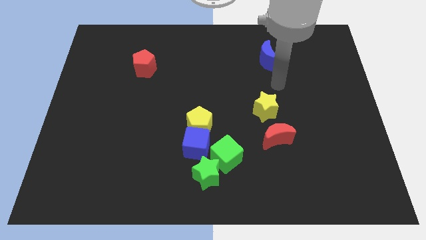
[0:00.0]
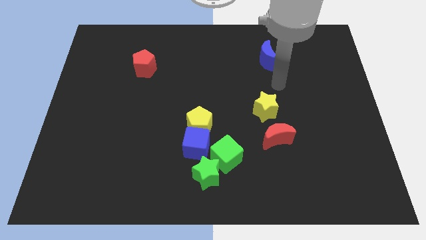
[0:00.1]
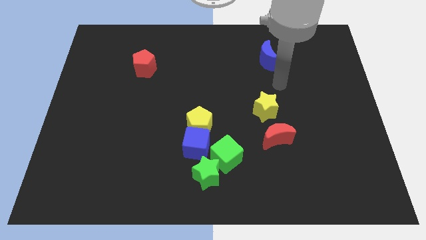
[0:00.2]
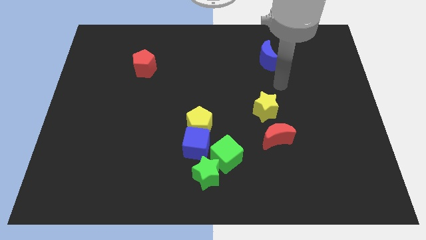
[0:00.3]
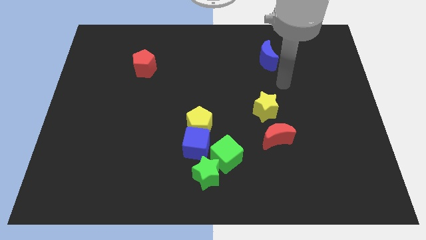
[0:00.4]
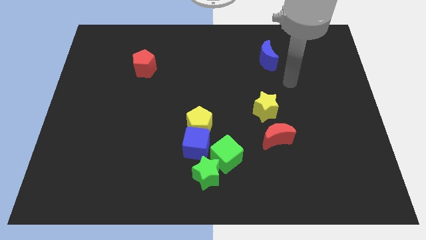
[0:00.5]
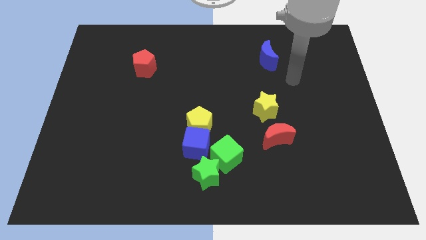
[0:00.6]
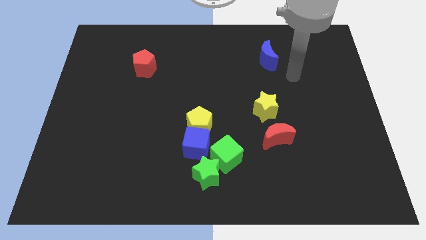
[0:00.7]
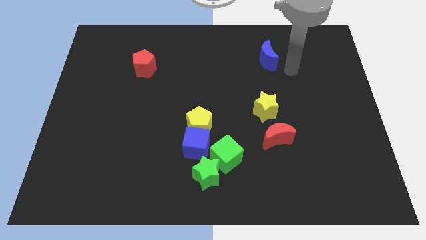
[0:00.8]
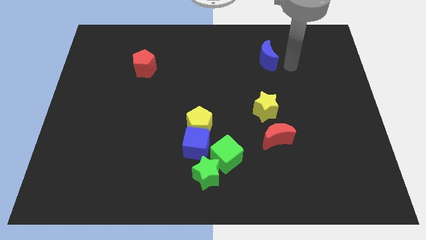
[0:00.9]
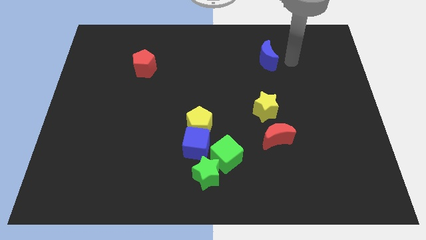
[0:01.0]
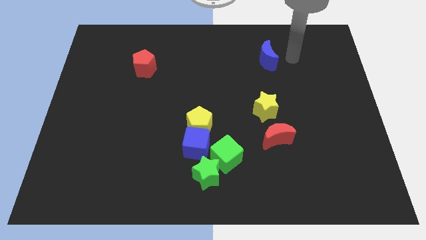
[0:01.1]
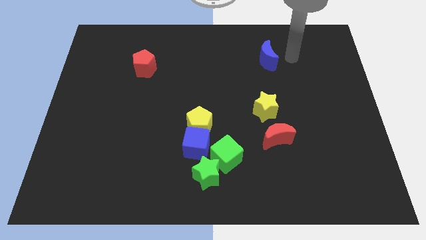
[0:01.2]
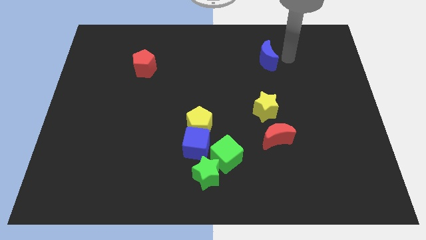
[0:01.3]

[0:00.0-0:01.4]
place your arm to the right of the blue crescent

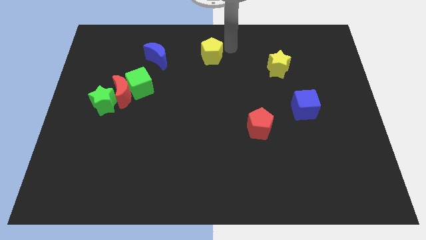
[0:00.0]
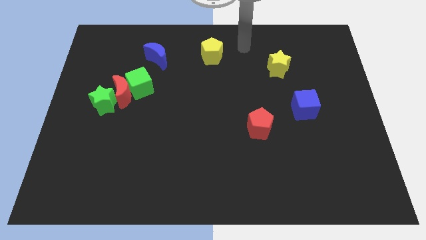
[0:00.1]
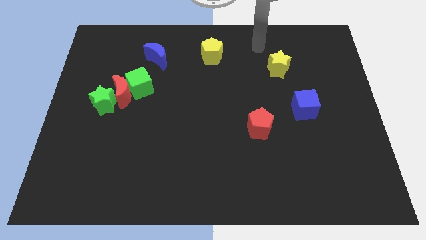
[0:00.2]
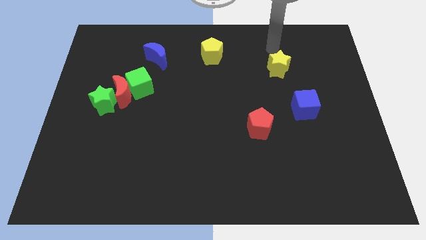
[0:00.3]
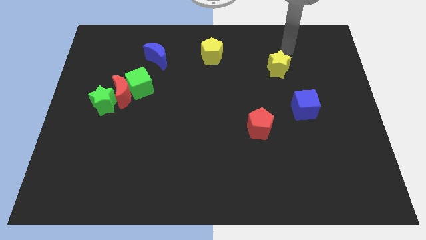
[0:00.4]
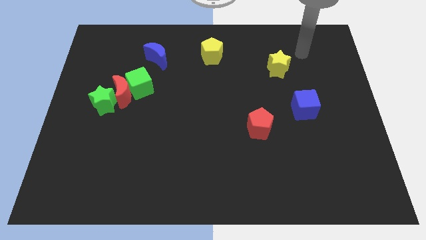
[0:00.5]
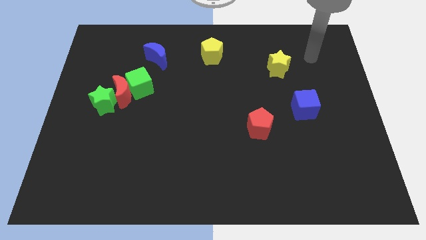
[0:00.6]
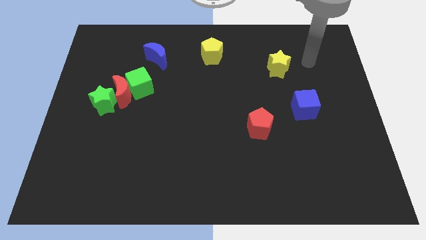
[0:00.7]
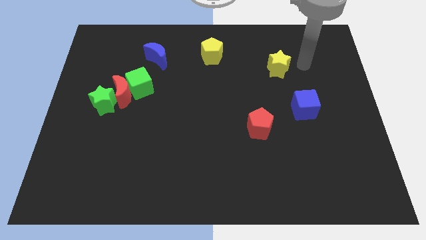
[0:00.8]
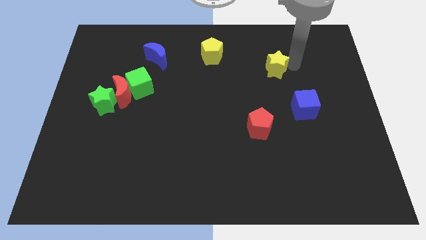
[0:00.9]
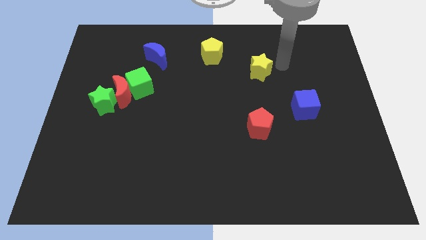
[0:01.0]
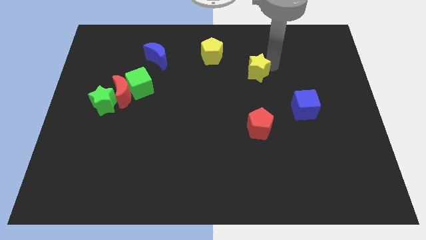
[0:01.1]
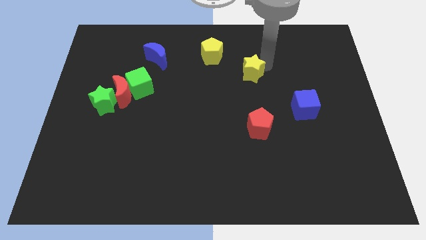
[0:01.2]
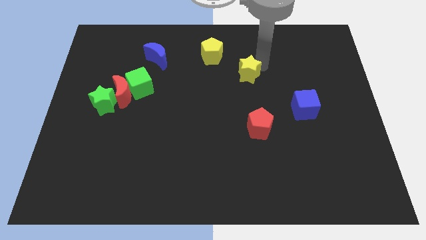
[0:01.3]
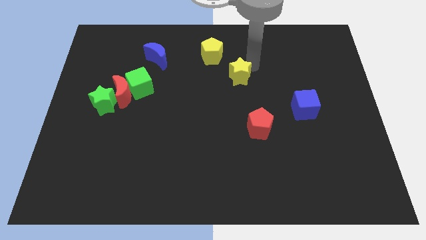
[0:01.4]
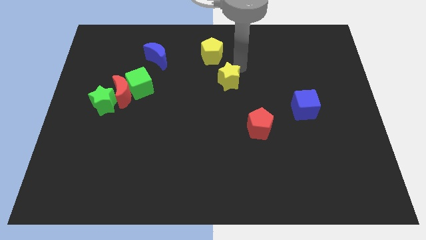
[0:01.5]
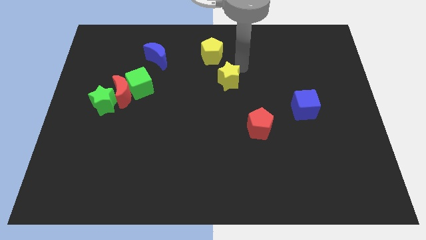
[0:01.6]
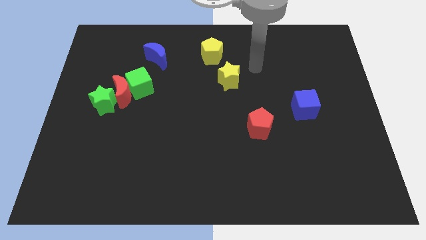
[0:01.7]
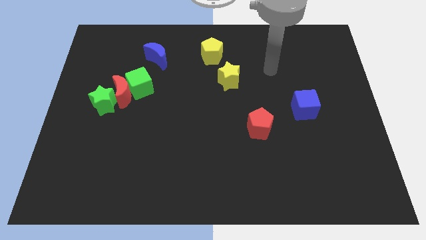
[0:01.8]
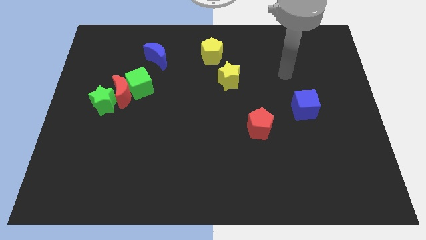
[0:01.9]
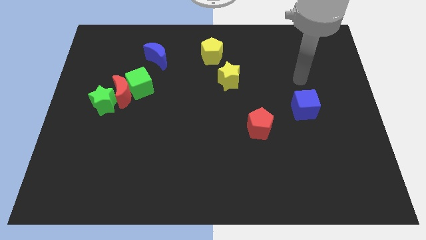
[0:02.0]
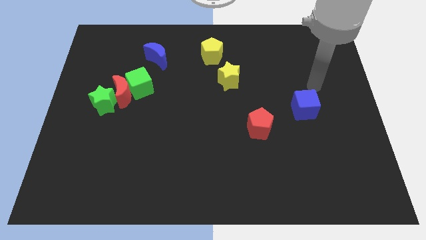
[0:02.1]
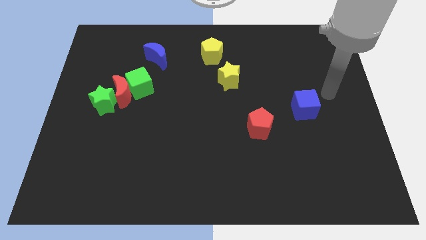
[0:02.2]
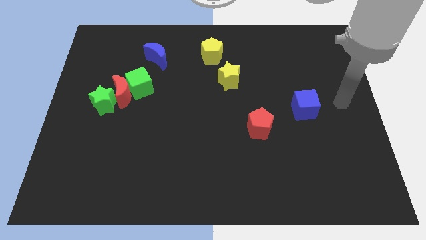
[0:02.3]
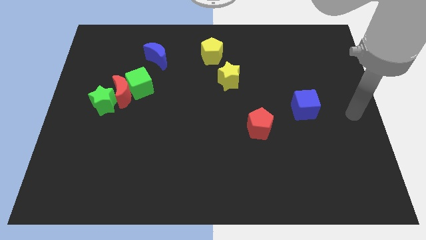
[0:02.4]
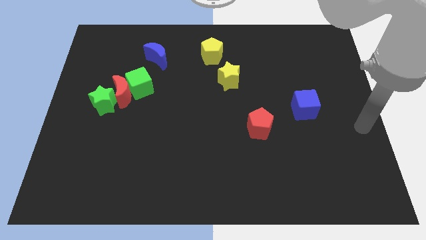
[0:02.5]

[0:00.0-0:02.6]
push the yellow star to right bottom to the yellow pentagon

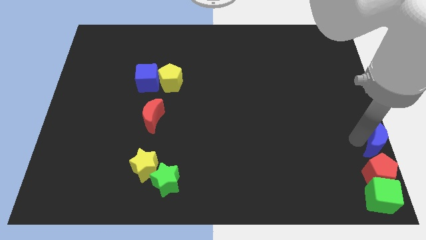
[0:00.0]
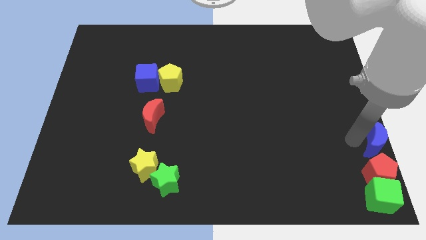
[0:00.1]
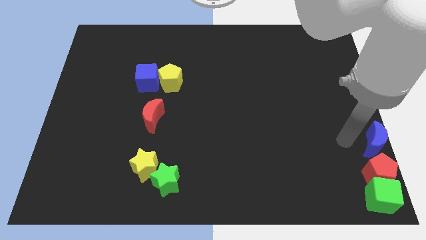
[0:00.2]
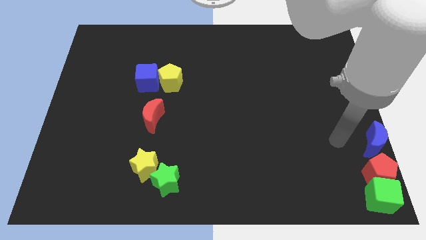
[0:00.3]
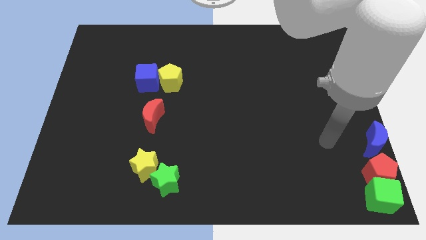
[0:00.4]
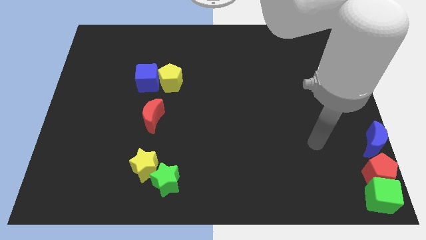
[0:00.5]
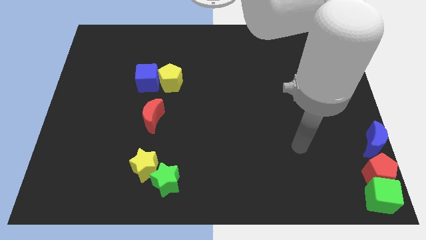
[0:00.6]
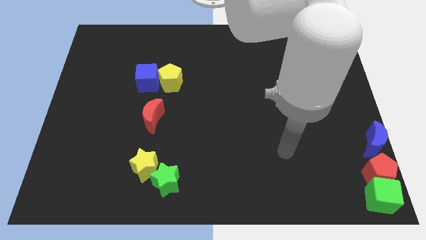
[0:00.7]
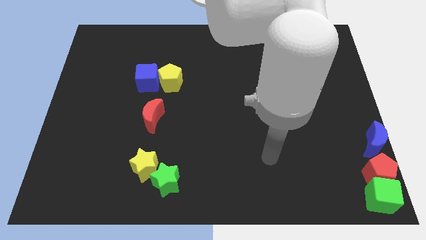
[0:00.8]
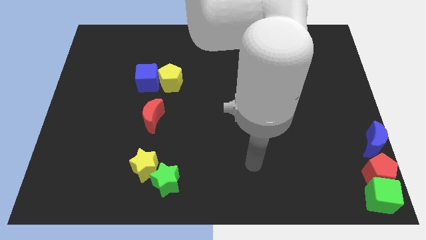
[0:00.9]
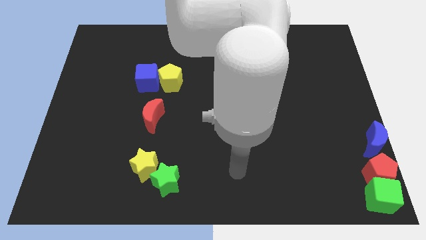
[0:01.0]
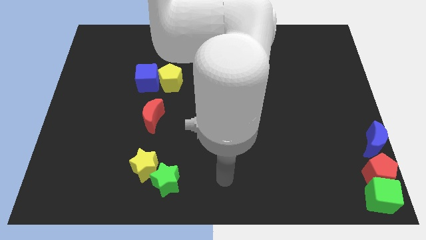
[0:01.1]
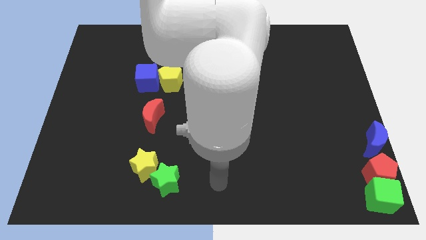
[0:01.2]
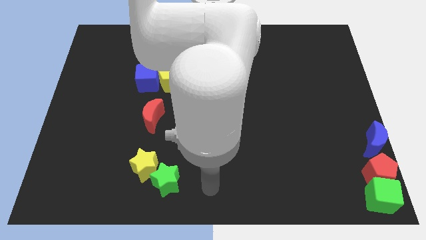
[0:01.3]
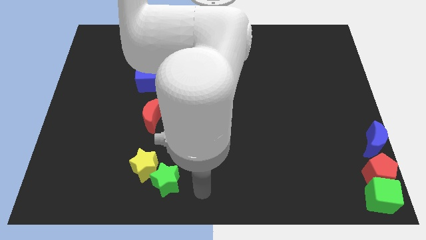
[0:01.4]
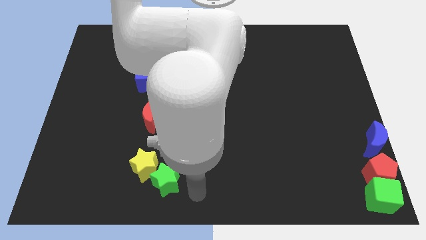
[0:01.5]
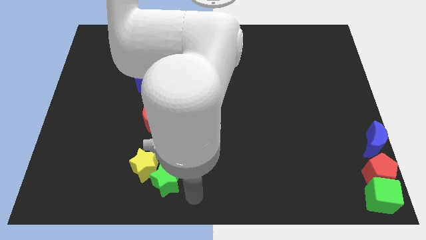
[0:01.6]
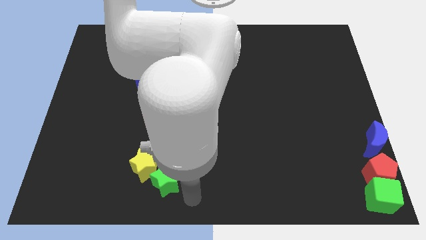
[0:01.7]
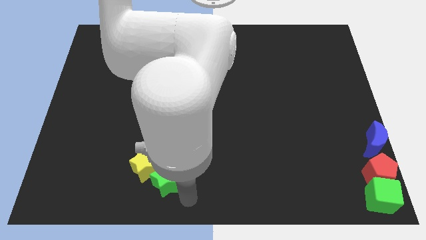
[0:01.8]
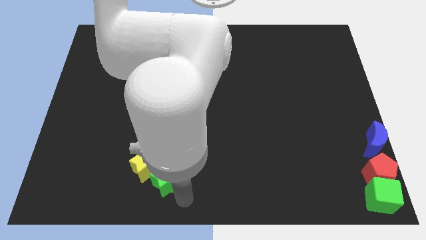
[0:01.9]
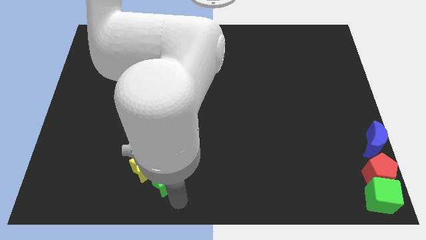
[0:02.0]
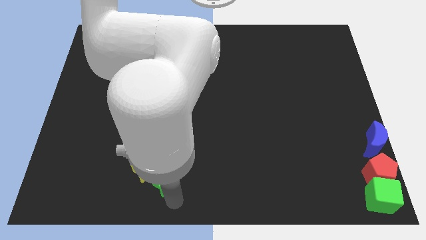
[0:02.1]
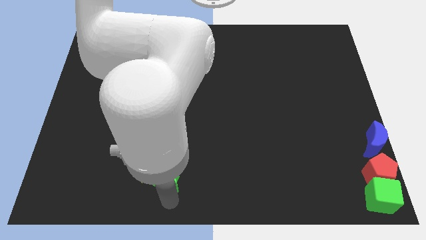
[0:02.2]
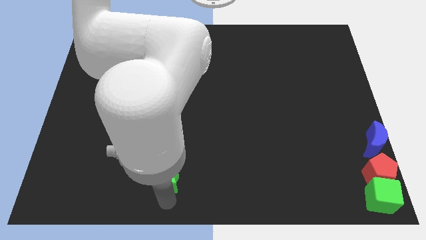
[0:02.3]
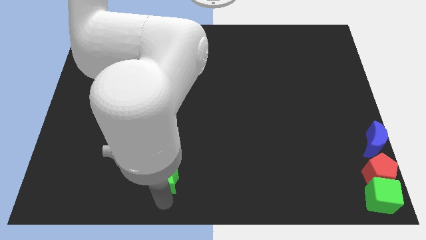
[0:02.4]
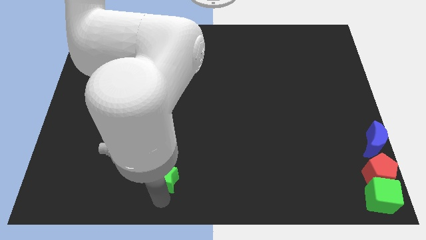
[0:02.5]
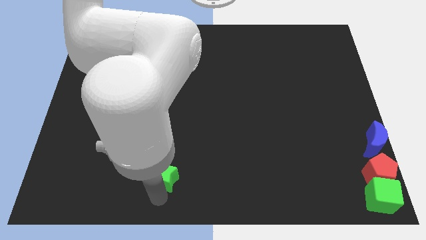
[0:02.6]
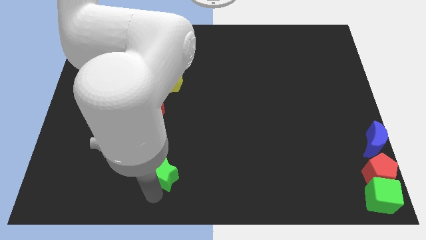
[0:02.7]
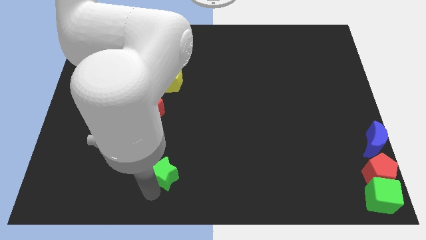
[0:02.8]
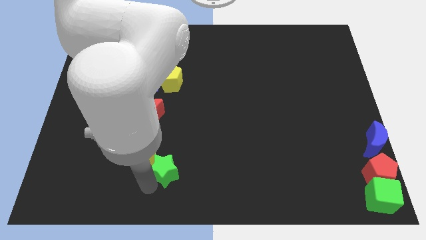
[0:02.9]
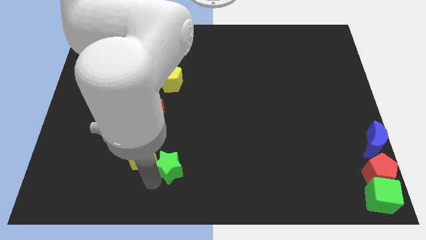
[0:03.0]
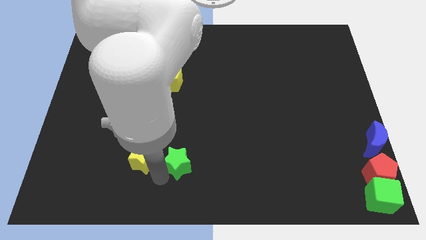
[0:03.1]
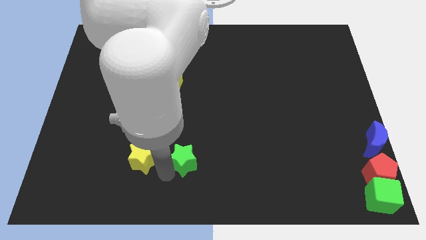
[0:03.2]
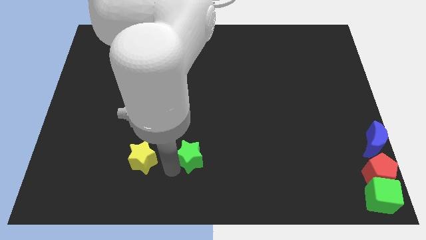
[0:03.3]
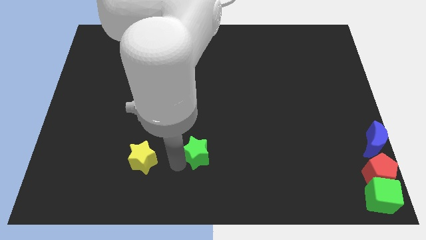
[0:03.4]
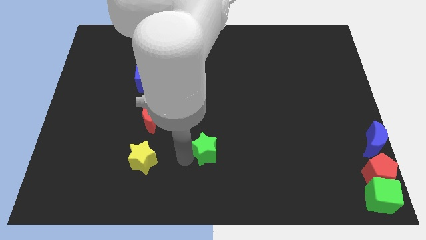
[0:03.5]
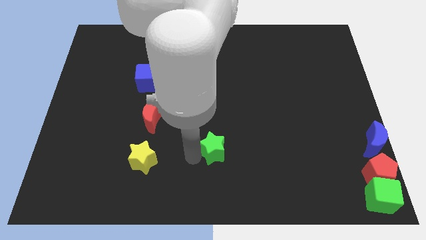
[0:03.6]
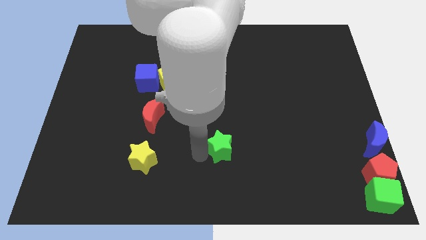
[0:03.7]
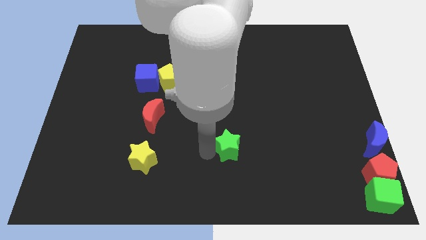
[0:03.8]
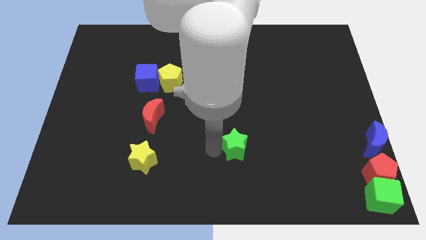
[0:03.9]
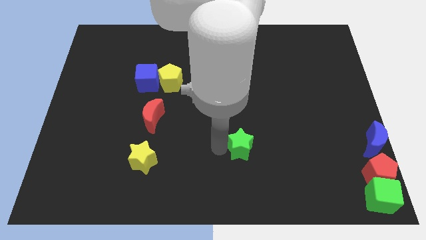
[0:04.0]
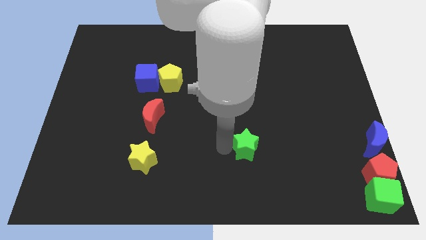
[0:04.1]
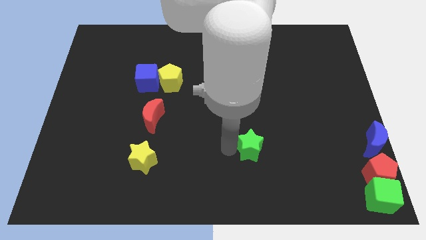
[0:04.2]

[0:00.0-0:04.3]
move green star towards the right centre of the board

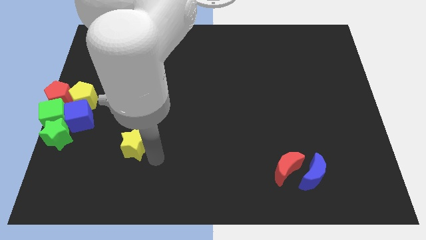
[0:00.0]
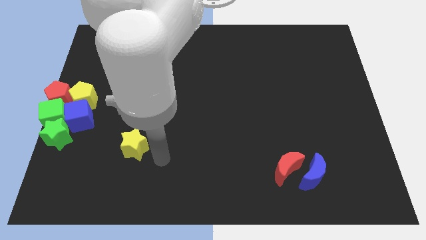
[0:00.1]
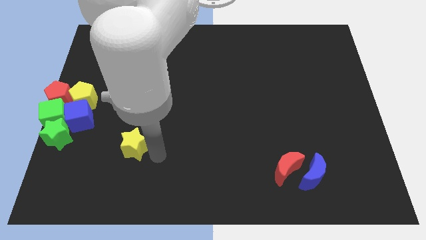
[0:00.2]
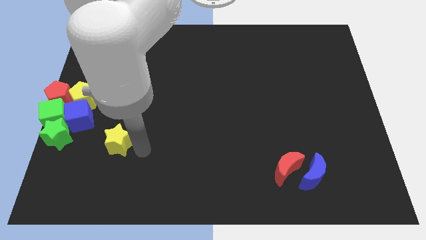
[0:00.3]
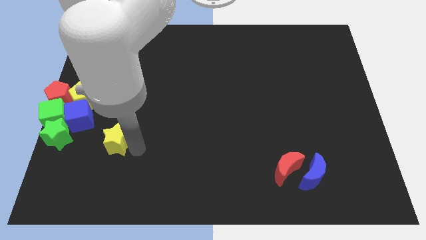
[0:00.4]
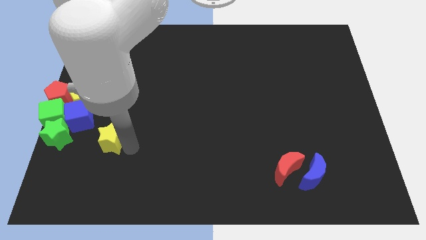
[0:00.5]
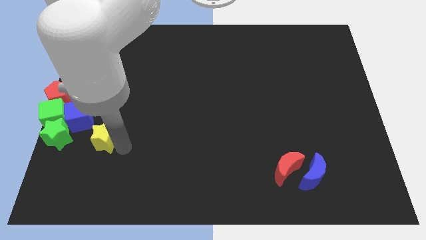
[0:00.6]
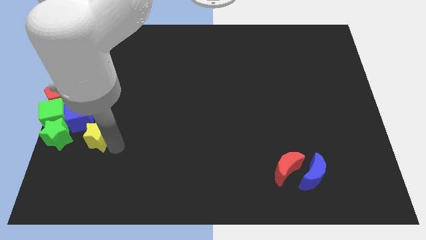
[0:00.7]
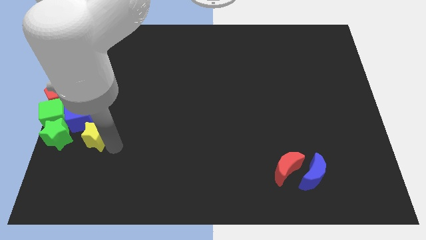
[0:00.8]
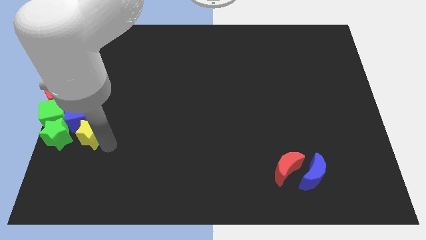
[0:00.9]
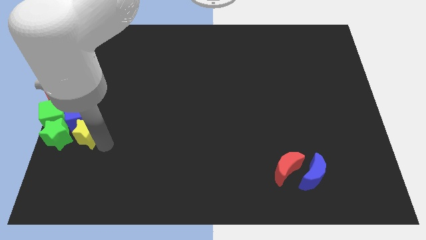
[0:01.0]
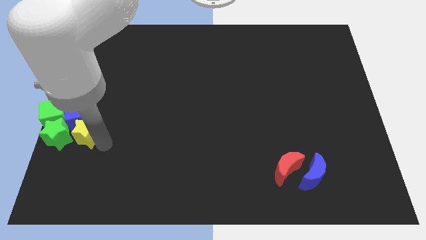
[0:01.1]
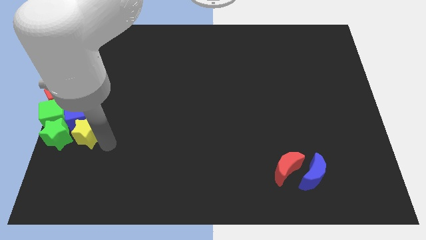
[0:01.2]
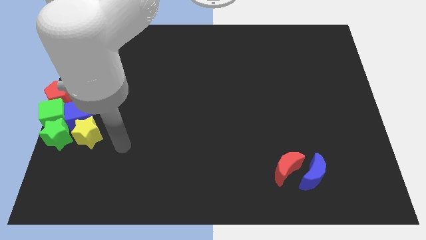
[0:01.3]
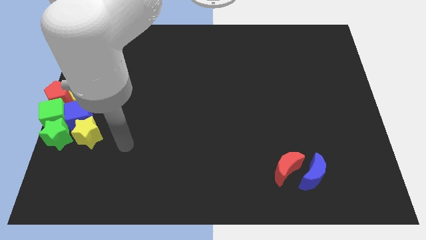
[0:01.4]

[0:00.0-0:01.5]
place the yellow star into the group of blocks
